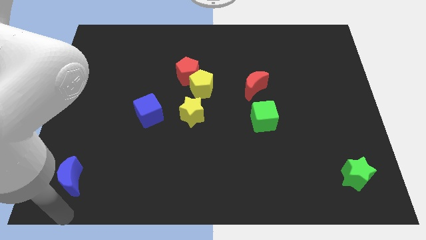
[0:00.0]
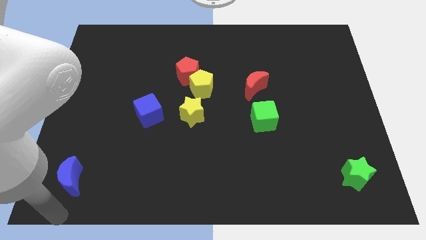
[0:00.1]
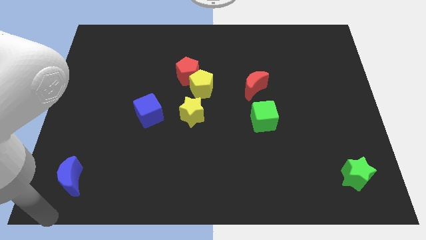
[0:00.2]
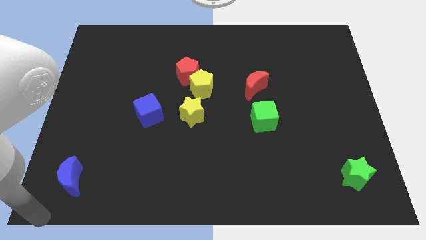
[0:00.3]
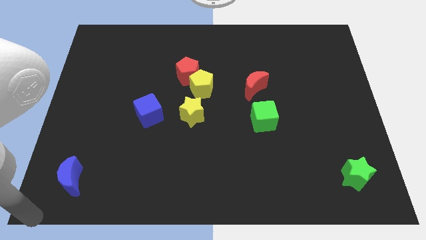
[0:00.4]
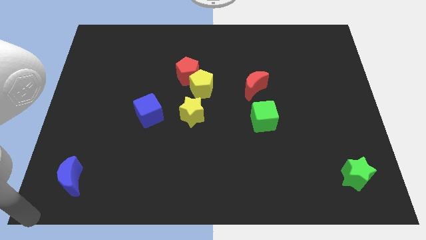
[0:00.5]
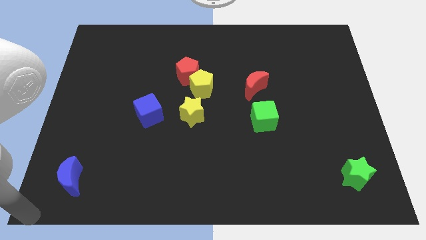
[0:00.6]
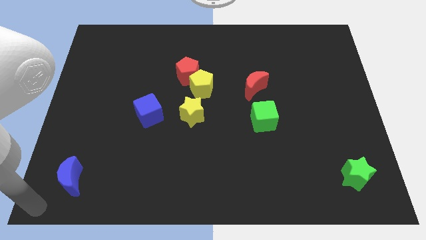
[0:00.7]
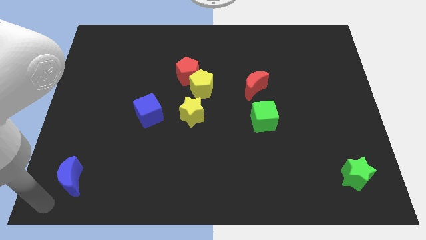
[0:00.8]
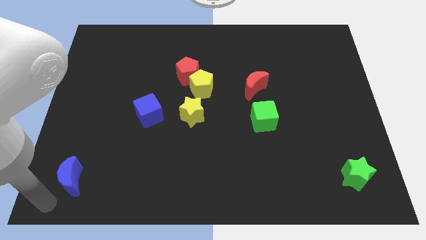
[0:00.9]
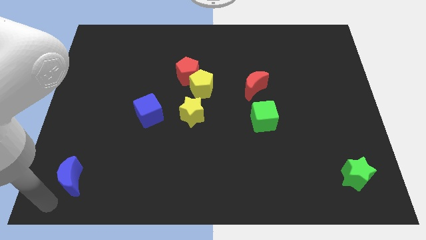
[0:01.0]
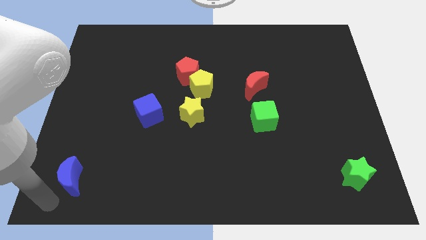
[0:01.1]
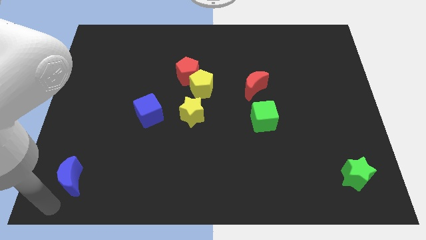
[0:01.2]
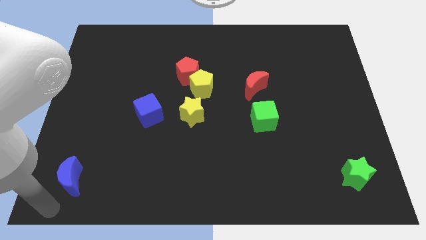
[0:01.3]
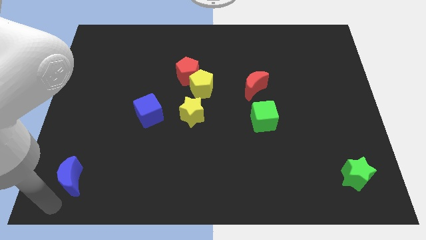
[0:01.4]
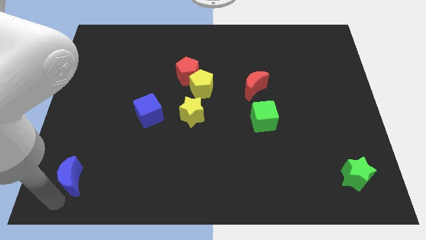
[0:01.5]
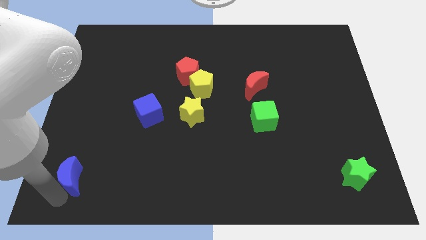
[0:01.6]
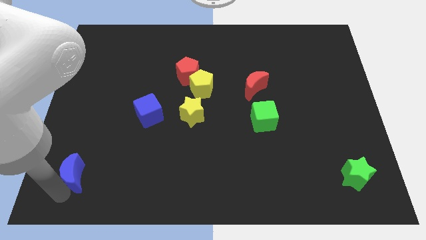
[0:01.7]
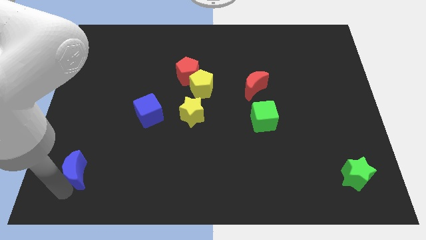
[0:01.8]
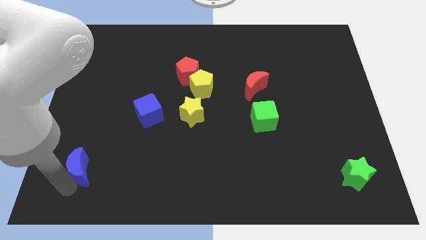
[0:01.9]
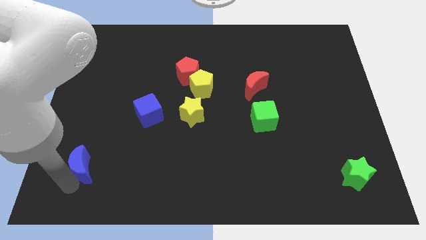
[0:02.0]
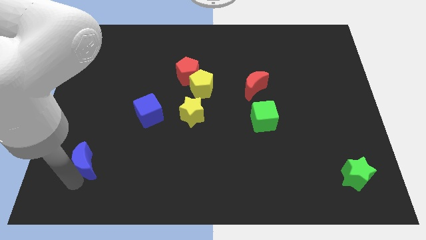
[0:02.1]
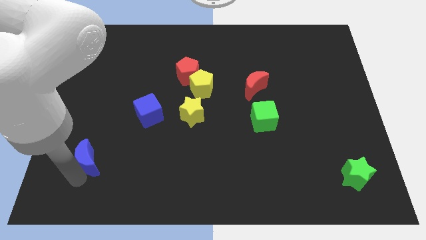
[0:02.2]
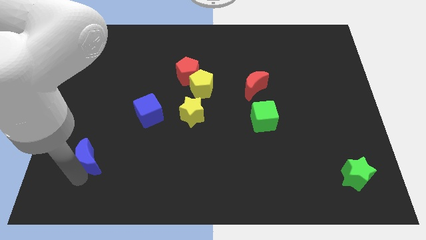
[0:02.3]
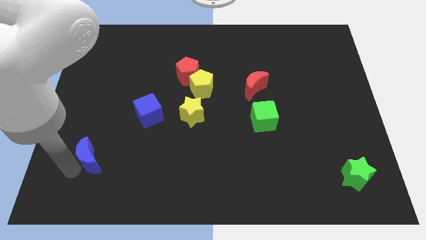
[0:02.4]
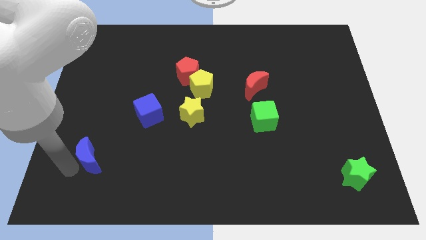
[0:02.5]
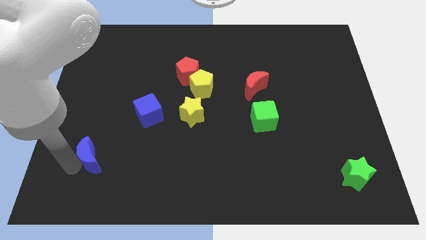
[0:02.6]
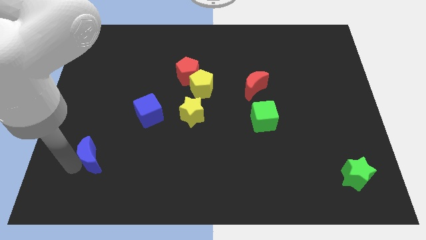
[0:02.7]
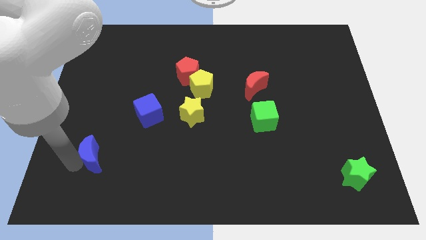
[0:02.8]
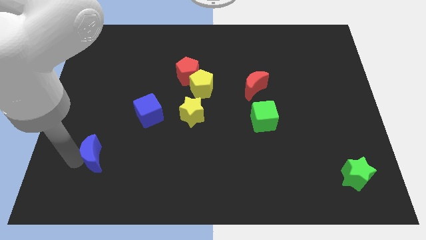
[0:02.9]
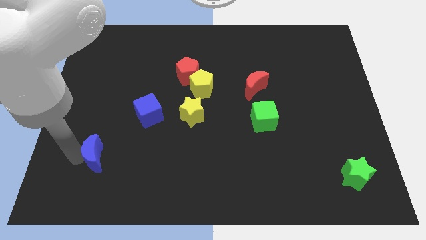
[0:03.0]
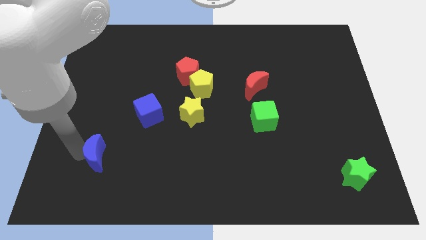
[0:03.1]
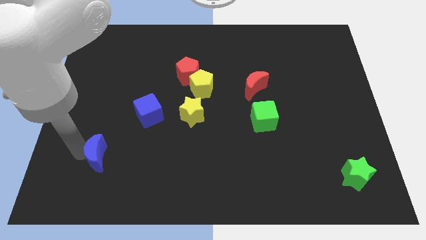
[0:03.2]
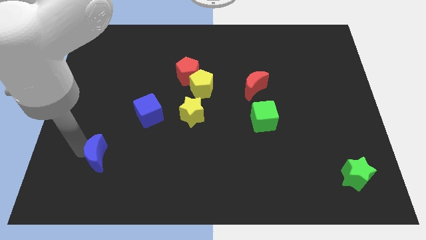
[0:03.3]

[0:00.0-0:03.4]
slightly push the blue crescent to the diagonal bottom left of blue cube

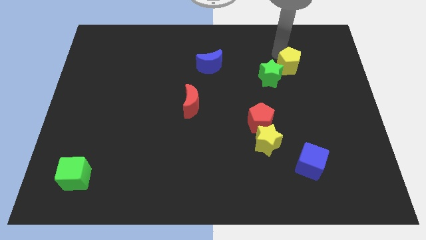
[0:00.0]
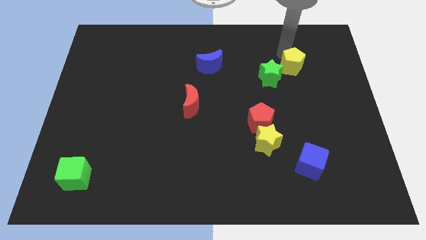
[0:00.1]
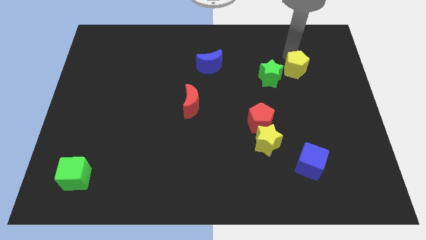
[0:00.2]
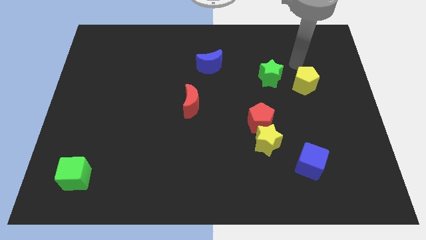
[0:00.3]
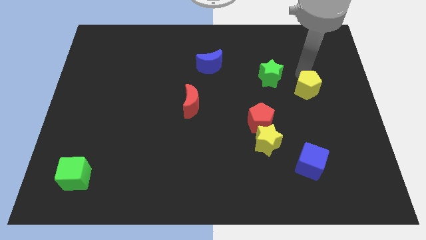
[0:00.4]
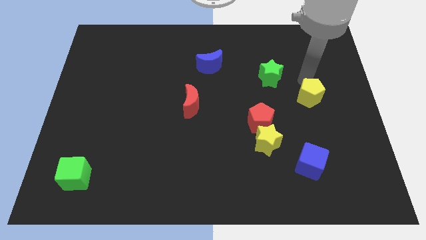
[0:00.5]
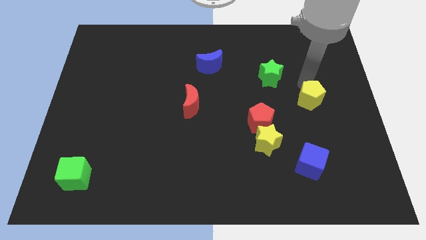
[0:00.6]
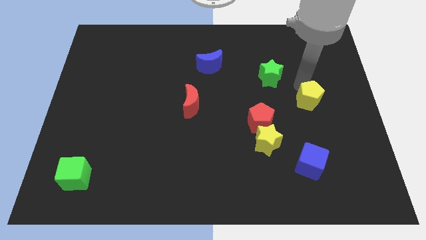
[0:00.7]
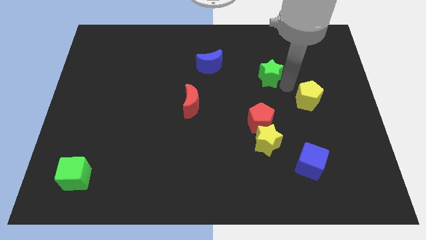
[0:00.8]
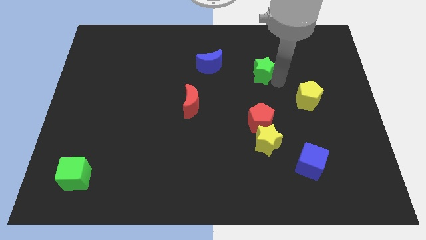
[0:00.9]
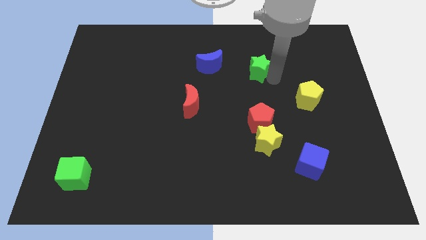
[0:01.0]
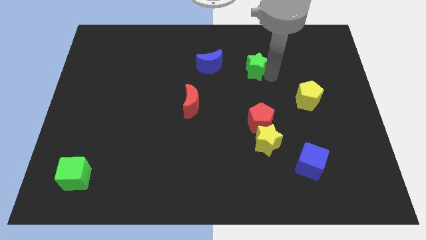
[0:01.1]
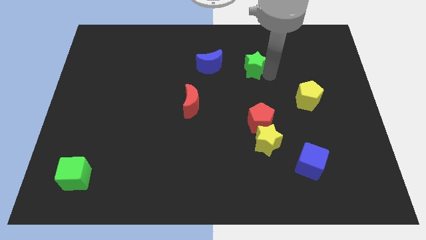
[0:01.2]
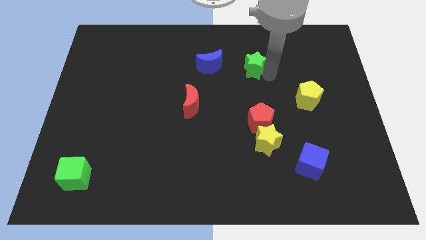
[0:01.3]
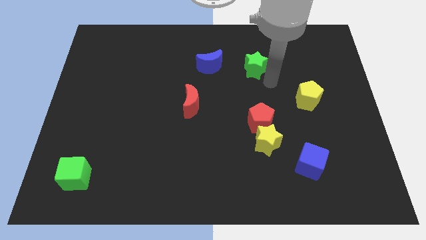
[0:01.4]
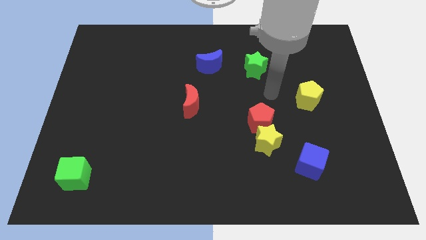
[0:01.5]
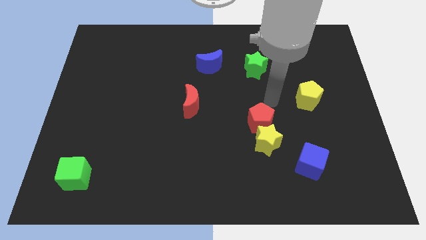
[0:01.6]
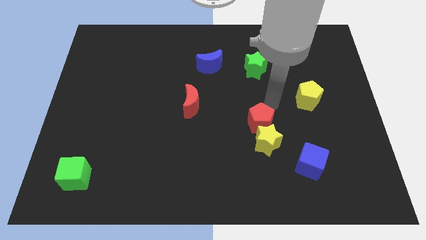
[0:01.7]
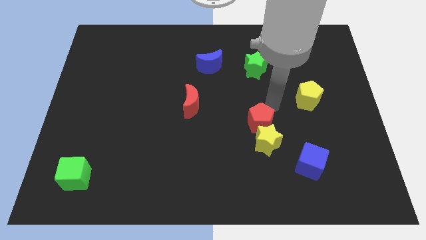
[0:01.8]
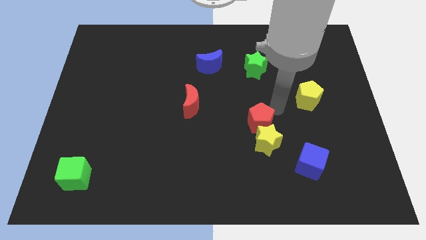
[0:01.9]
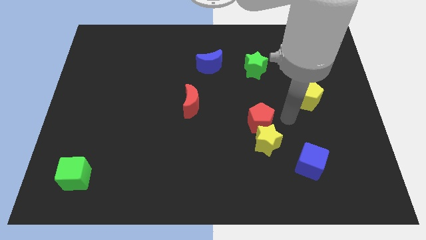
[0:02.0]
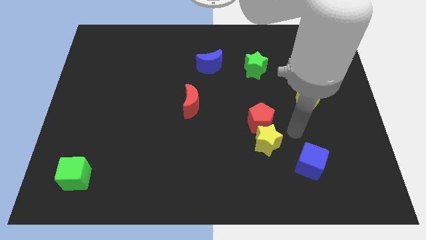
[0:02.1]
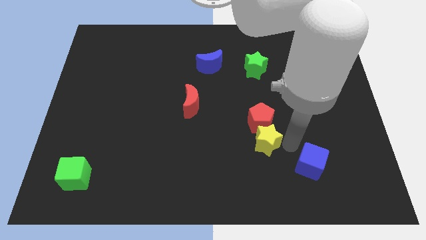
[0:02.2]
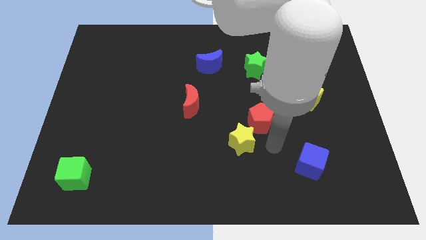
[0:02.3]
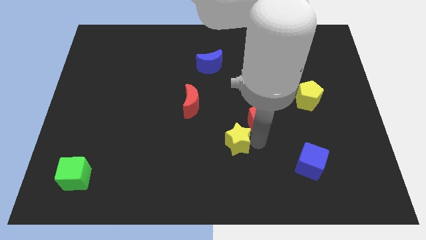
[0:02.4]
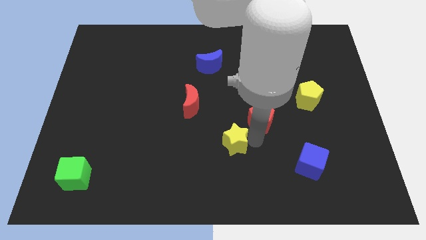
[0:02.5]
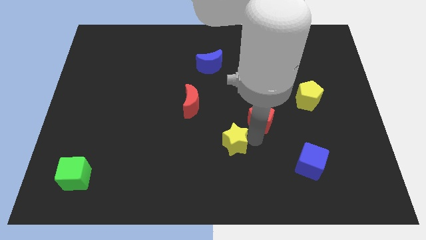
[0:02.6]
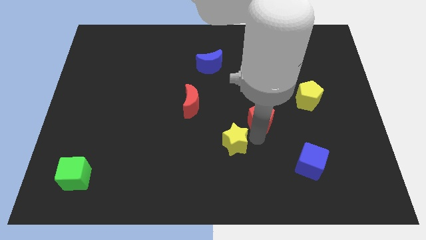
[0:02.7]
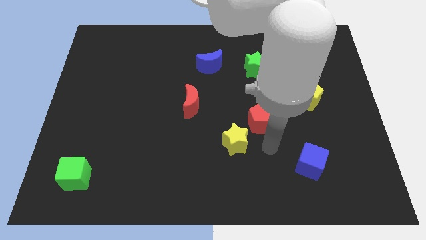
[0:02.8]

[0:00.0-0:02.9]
place the yellow pentagon diagonal bottom right of green star

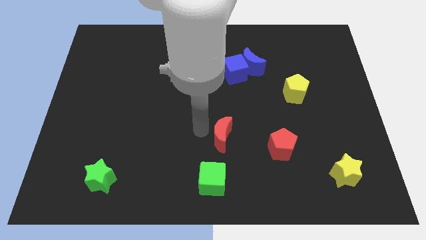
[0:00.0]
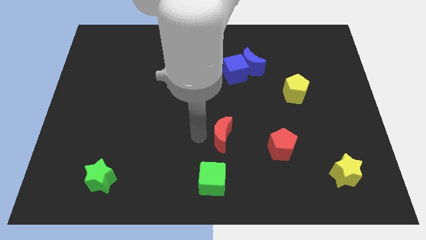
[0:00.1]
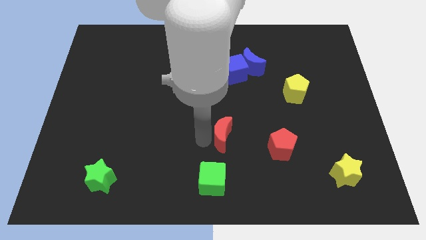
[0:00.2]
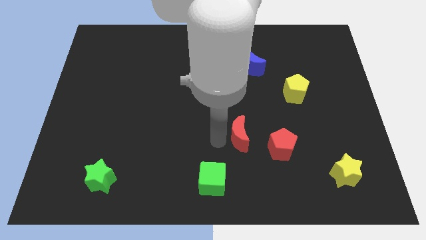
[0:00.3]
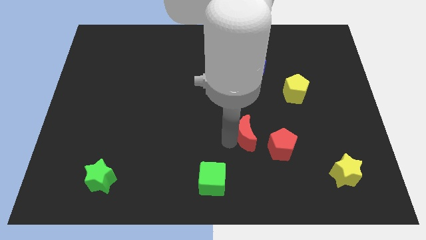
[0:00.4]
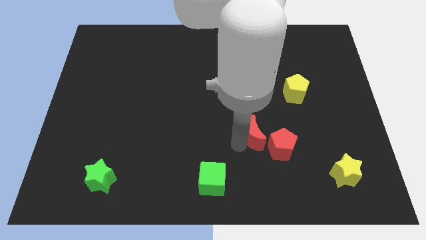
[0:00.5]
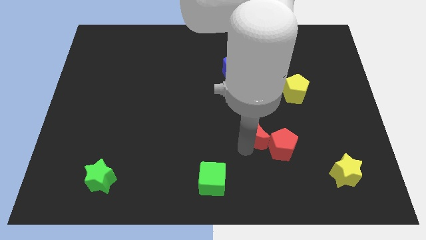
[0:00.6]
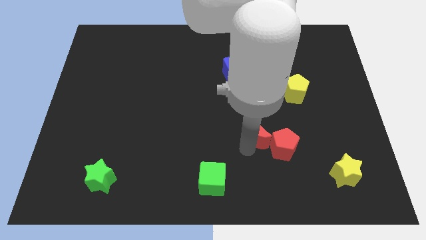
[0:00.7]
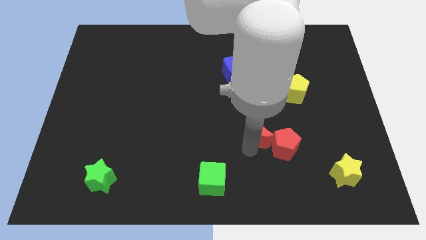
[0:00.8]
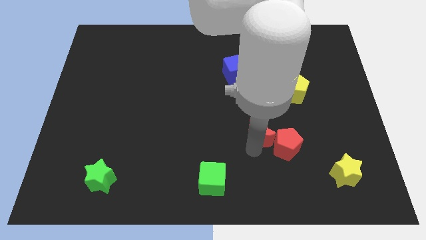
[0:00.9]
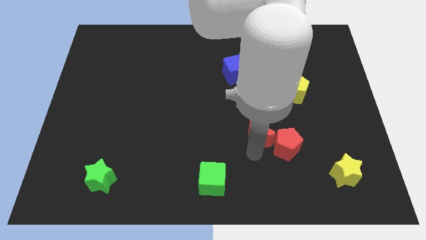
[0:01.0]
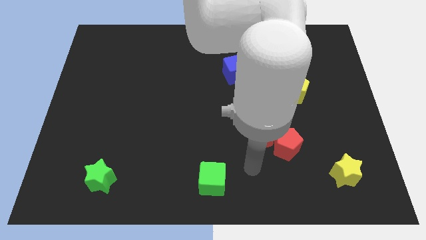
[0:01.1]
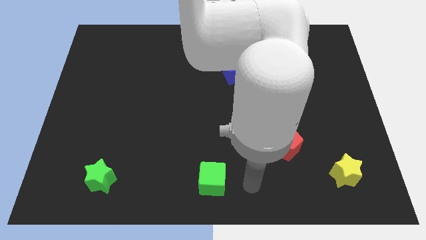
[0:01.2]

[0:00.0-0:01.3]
make the red crescent to touch the left side of the red pentagon

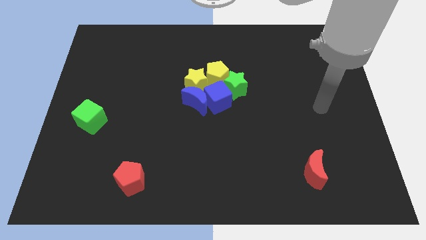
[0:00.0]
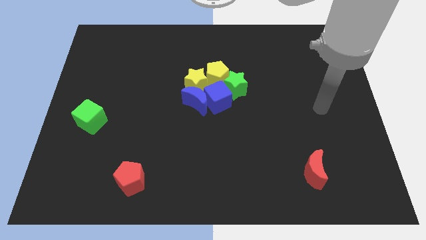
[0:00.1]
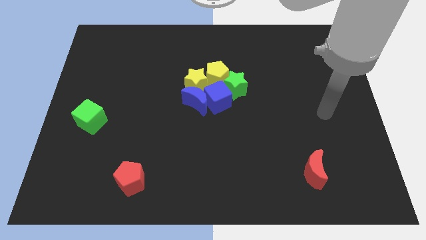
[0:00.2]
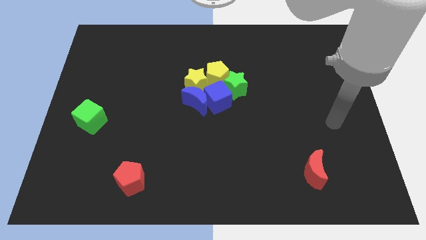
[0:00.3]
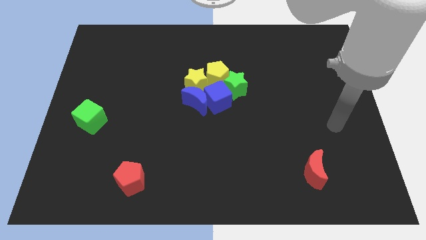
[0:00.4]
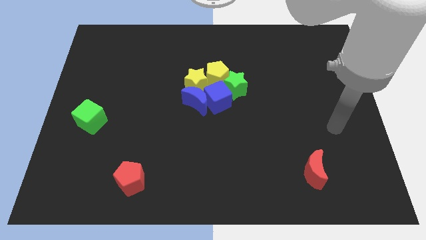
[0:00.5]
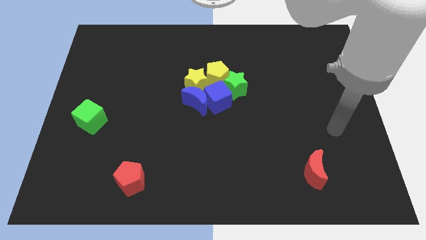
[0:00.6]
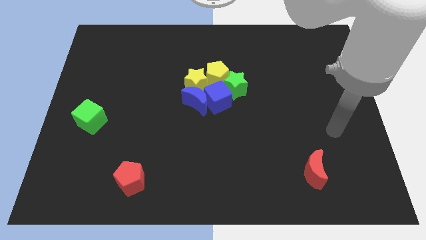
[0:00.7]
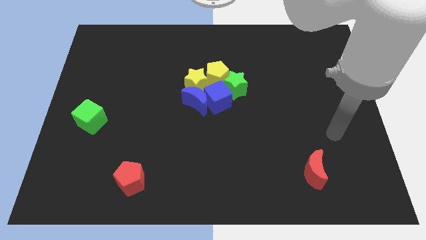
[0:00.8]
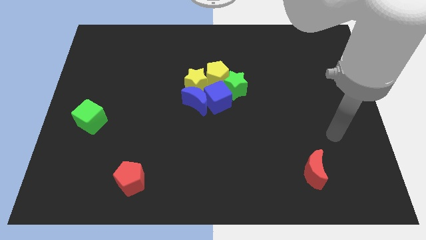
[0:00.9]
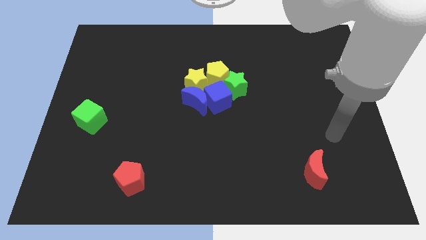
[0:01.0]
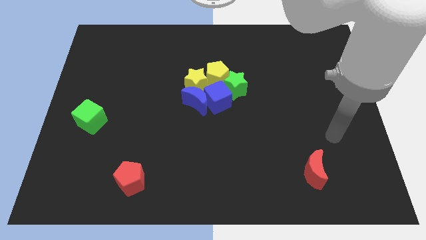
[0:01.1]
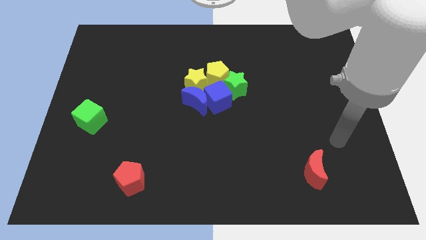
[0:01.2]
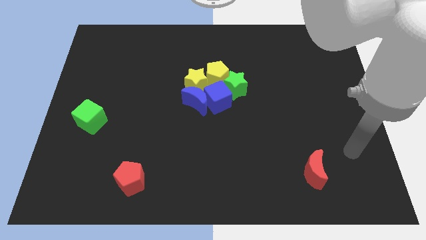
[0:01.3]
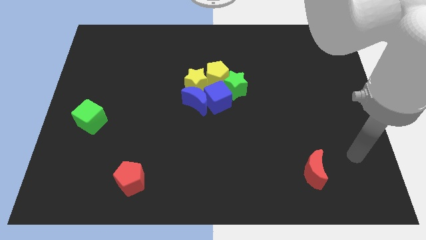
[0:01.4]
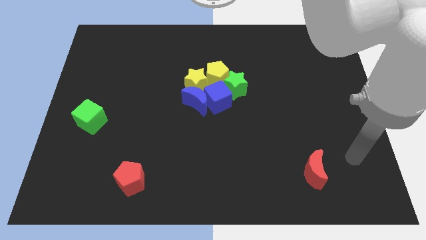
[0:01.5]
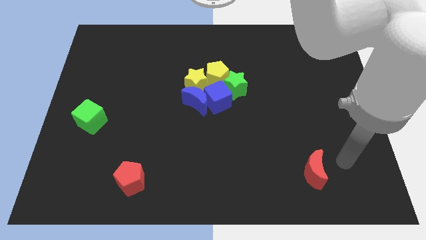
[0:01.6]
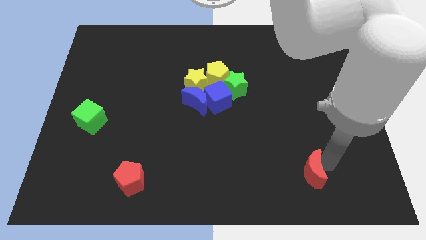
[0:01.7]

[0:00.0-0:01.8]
point the arm to the right of the red crescent
